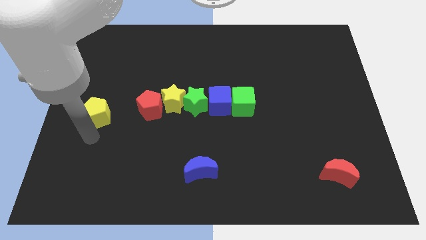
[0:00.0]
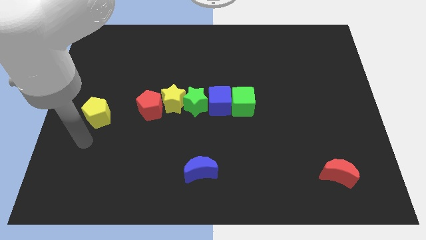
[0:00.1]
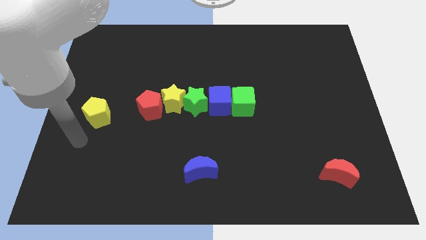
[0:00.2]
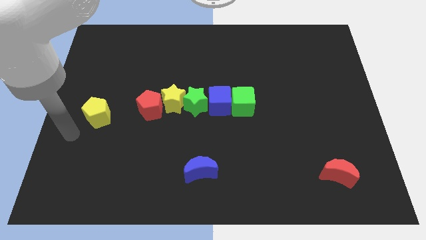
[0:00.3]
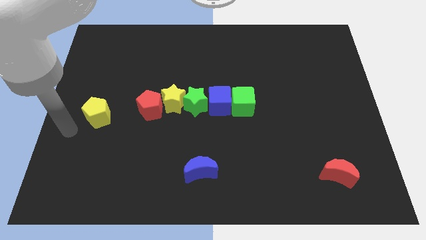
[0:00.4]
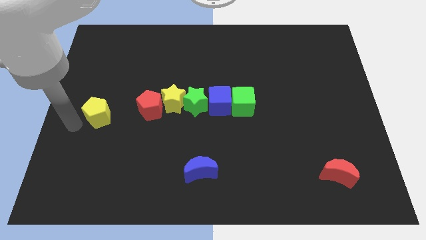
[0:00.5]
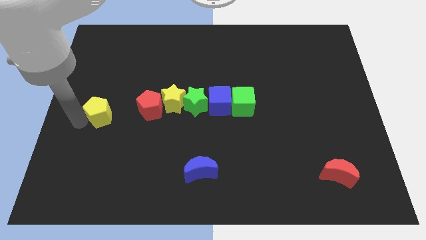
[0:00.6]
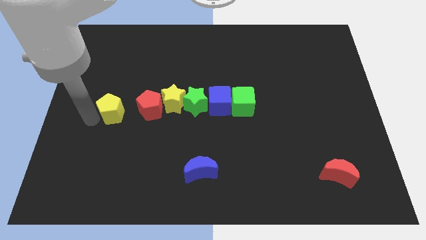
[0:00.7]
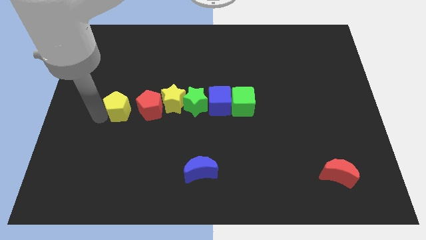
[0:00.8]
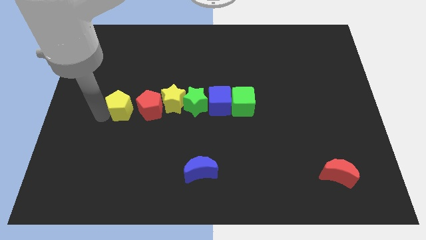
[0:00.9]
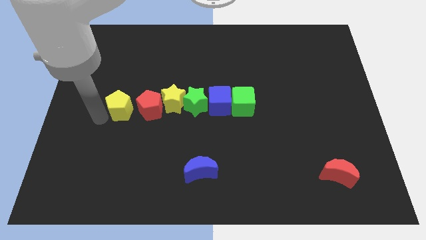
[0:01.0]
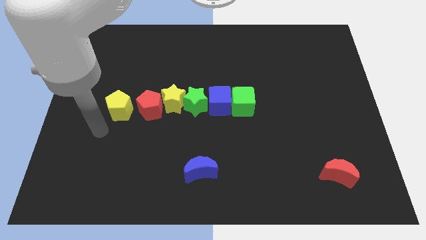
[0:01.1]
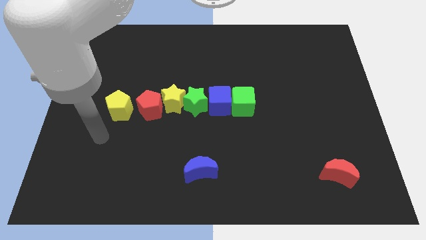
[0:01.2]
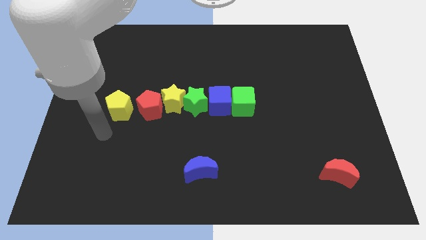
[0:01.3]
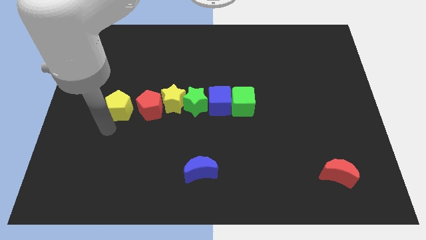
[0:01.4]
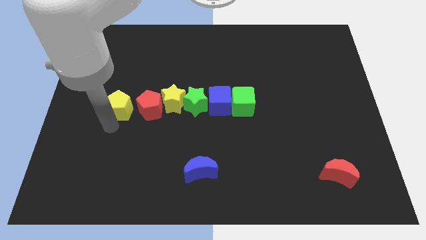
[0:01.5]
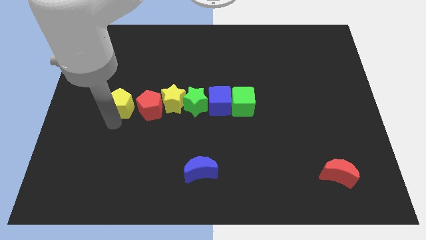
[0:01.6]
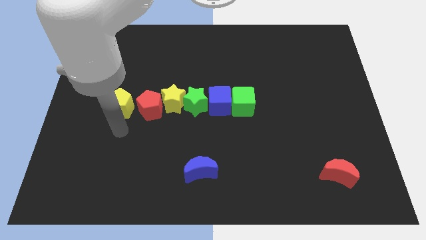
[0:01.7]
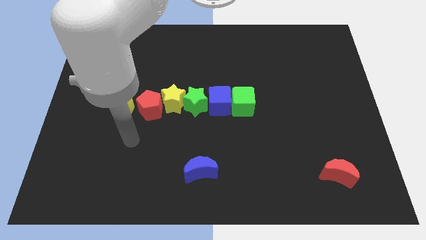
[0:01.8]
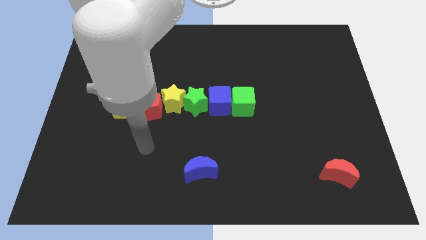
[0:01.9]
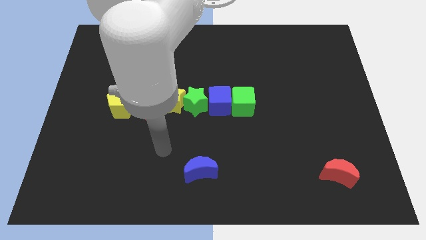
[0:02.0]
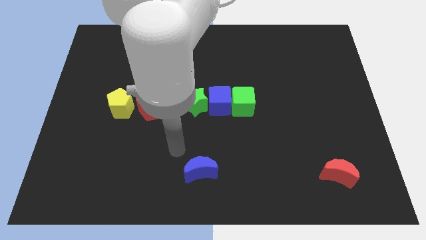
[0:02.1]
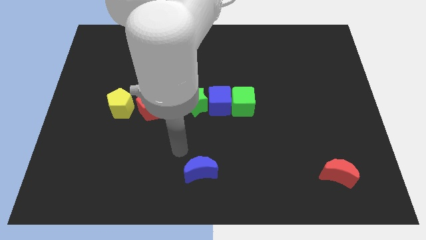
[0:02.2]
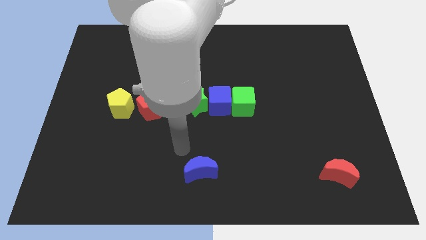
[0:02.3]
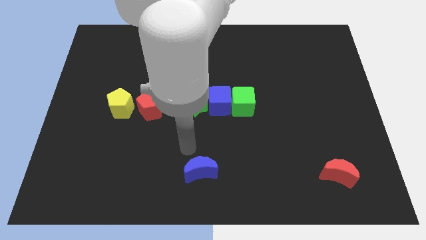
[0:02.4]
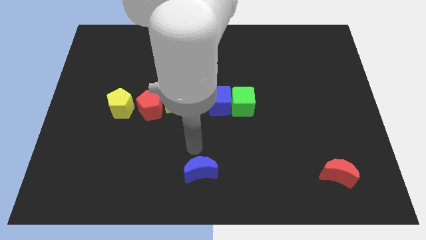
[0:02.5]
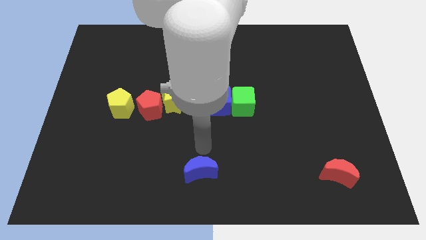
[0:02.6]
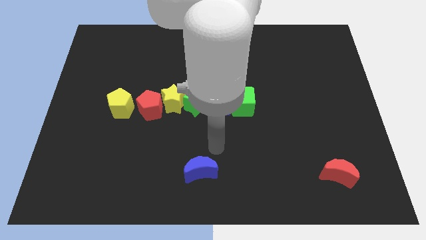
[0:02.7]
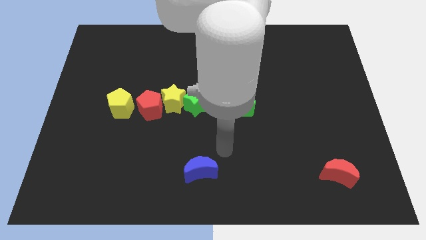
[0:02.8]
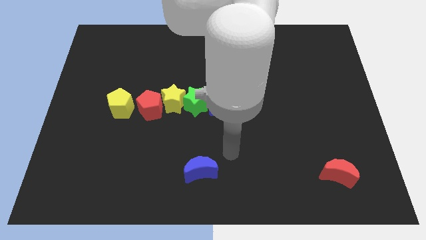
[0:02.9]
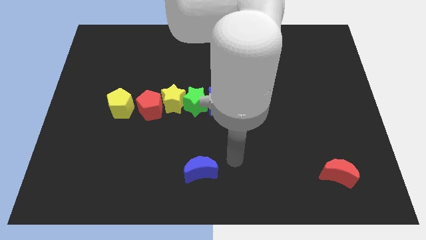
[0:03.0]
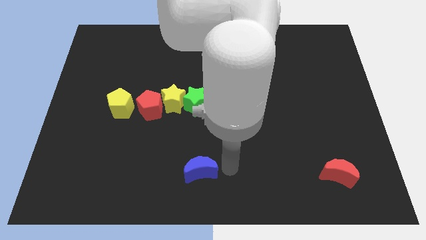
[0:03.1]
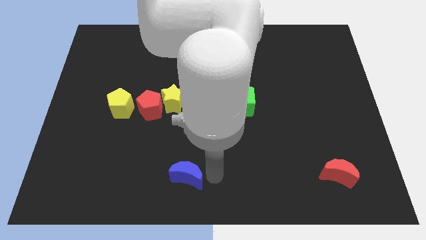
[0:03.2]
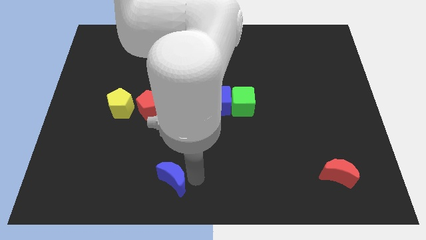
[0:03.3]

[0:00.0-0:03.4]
place the yellow pentagon towards left side of the red pentagon

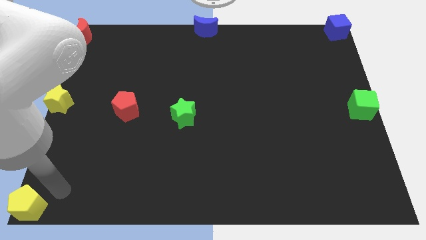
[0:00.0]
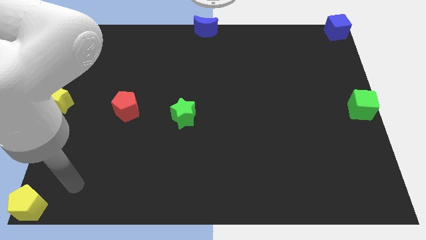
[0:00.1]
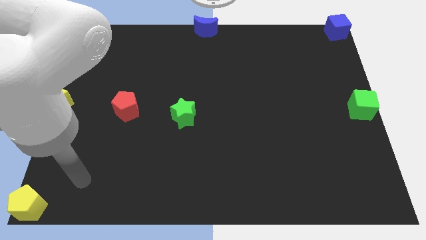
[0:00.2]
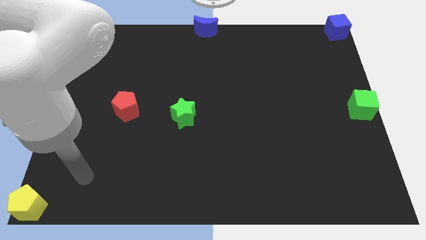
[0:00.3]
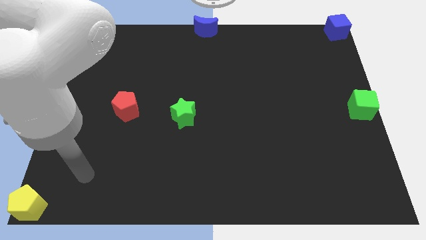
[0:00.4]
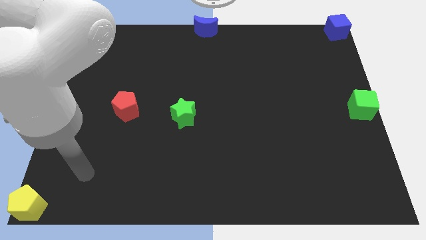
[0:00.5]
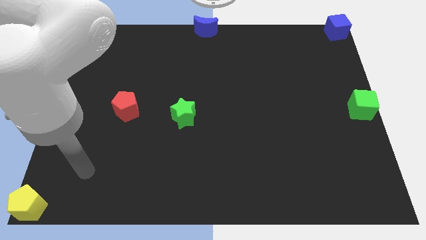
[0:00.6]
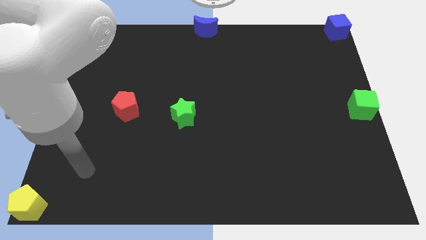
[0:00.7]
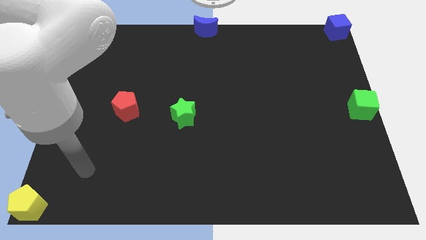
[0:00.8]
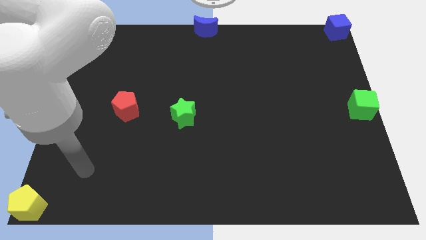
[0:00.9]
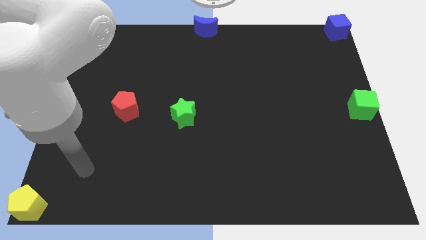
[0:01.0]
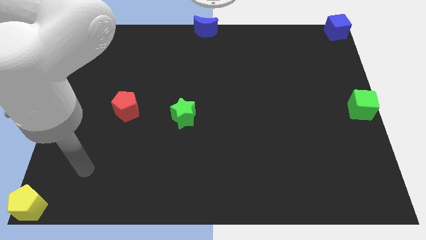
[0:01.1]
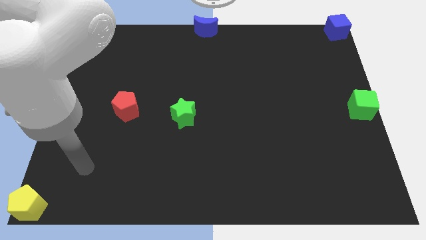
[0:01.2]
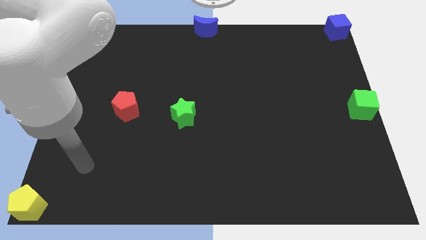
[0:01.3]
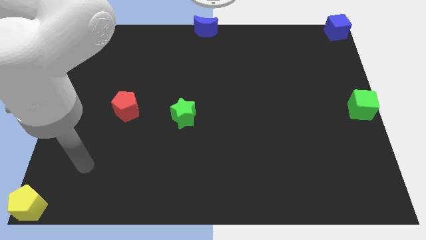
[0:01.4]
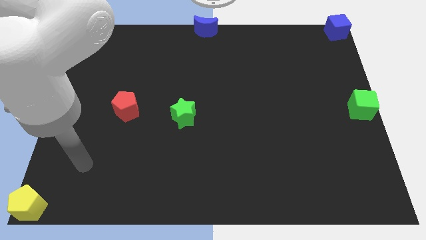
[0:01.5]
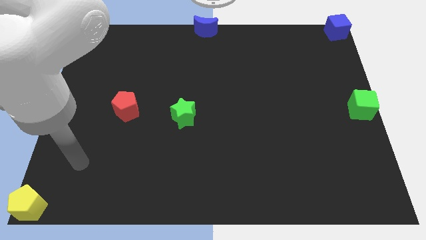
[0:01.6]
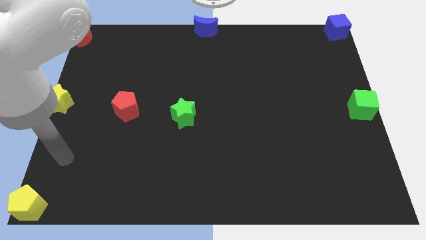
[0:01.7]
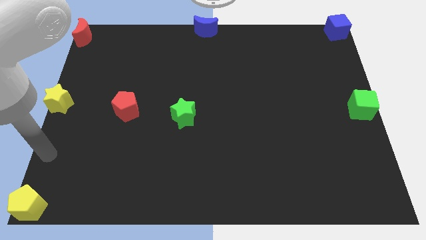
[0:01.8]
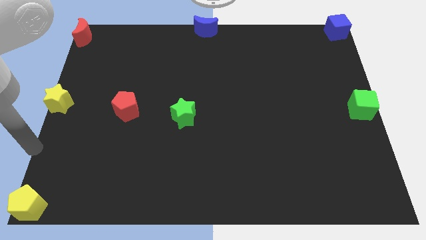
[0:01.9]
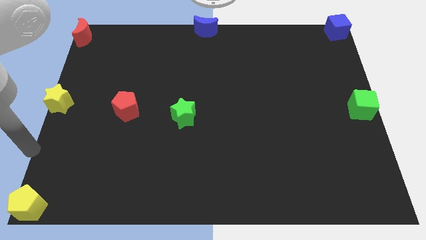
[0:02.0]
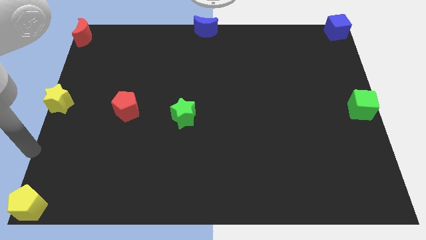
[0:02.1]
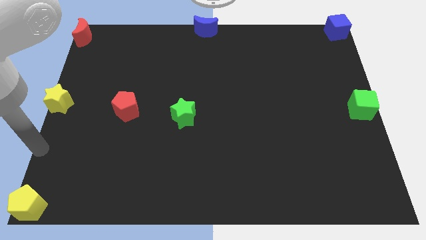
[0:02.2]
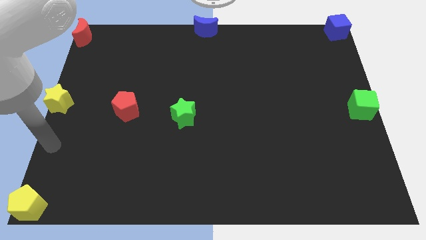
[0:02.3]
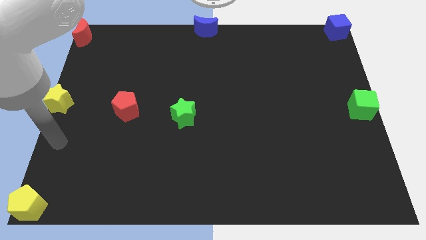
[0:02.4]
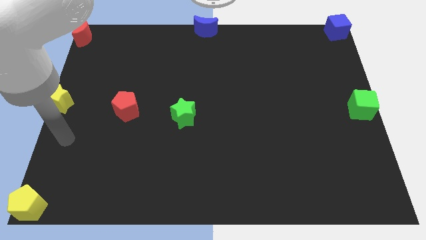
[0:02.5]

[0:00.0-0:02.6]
move away from the yellow pentagon

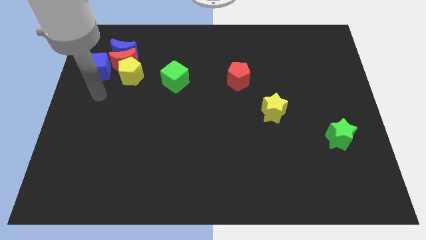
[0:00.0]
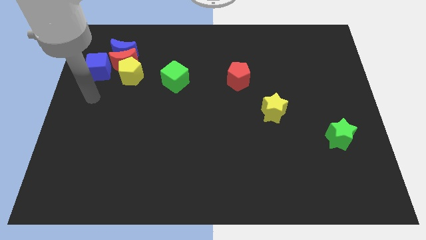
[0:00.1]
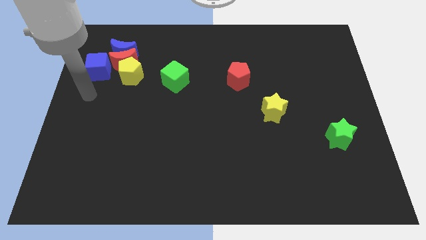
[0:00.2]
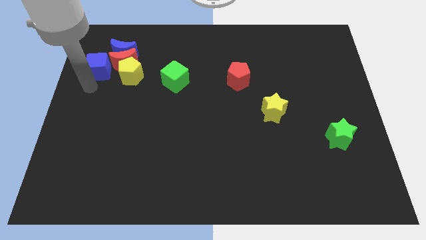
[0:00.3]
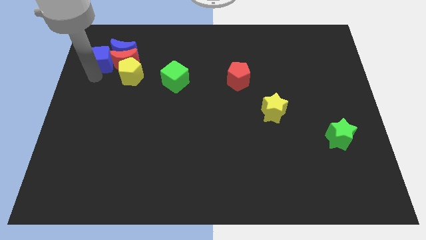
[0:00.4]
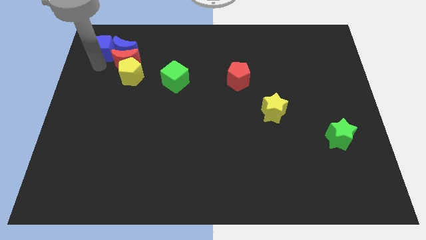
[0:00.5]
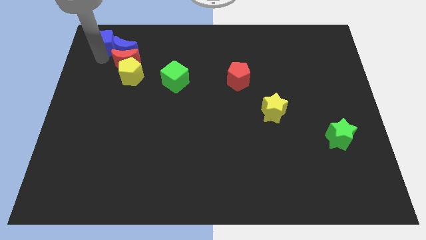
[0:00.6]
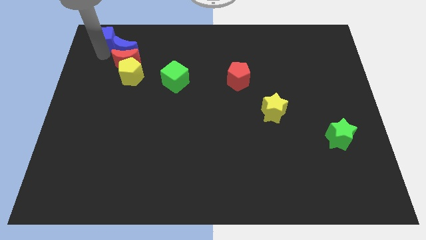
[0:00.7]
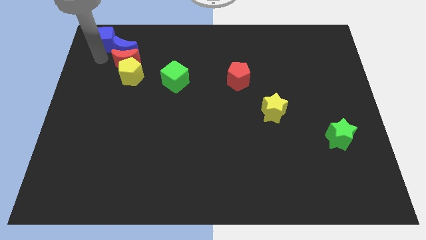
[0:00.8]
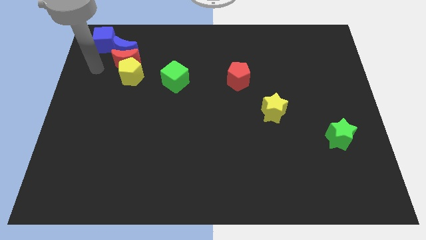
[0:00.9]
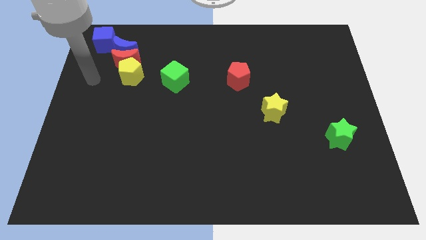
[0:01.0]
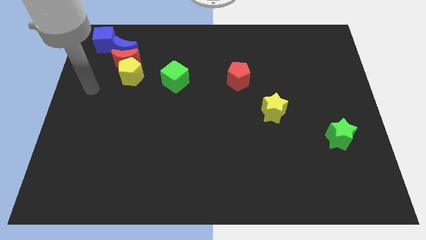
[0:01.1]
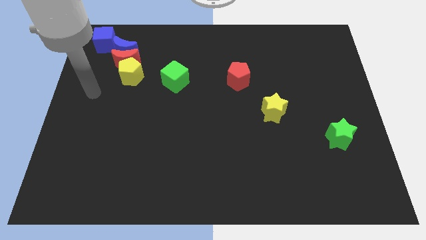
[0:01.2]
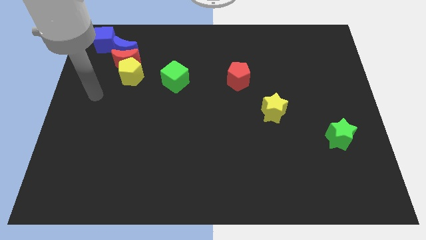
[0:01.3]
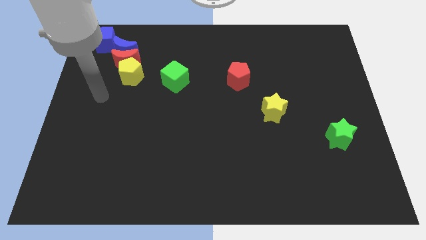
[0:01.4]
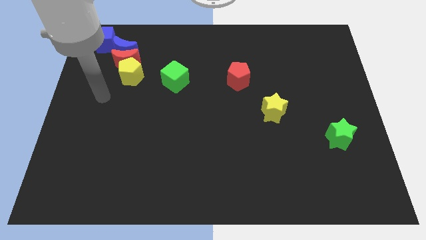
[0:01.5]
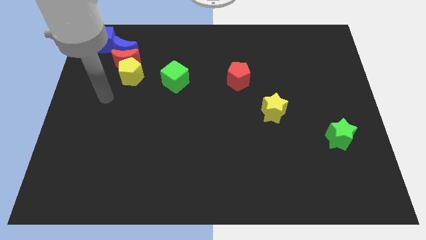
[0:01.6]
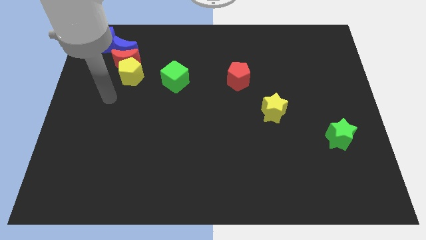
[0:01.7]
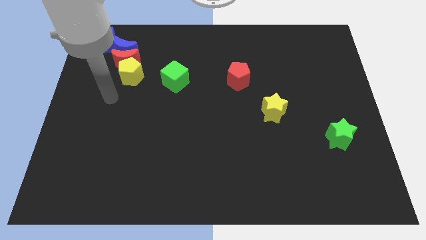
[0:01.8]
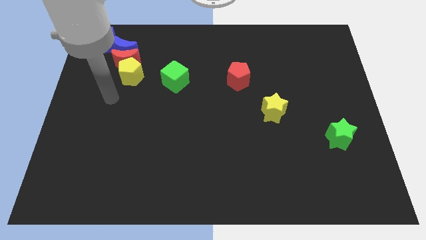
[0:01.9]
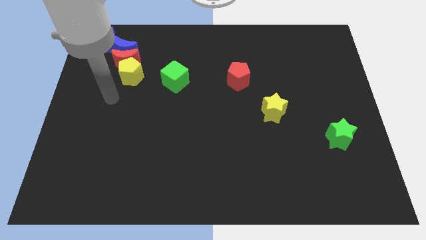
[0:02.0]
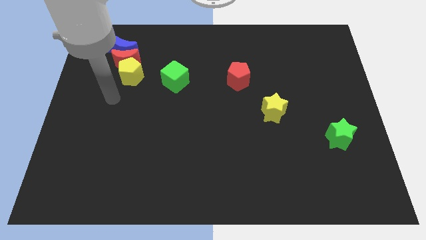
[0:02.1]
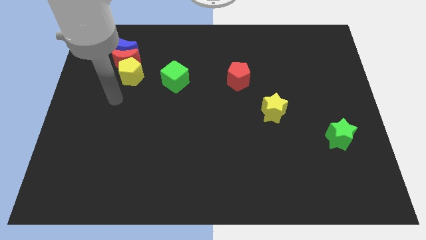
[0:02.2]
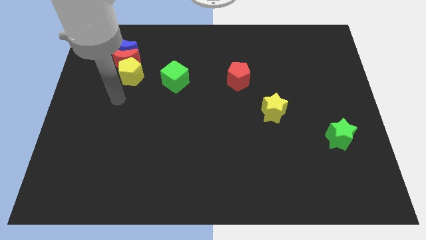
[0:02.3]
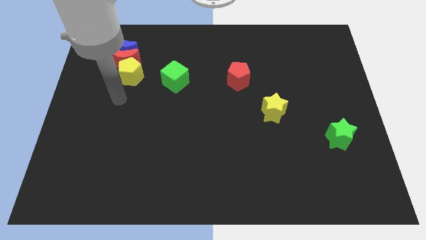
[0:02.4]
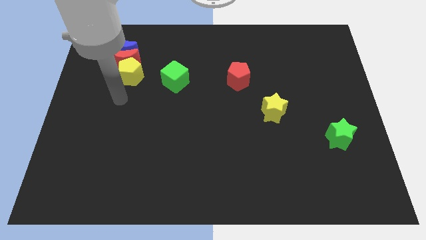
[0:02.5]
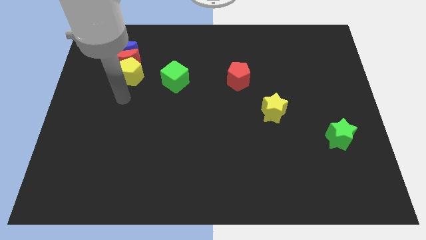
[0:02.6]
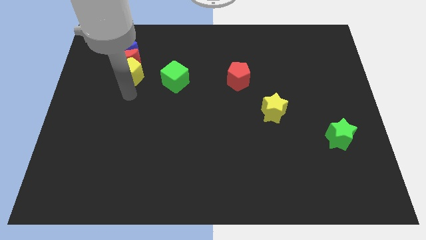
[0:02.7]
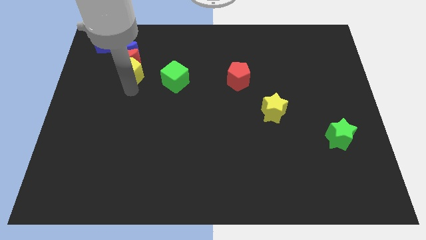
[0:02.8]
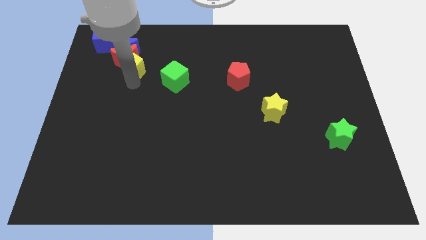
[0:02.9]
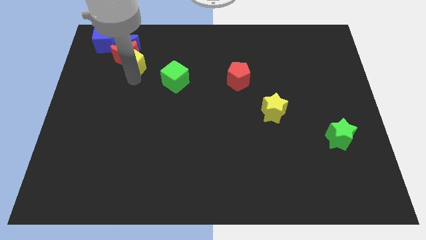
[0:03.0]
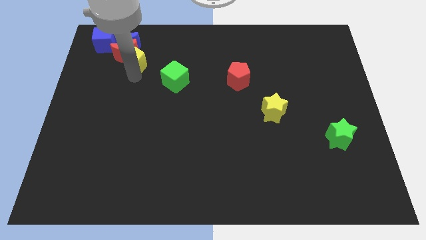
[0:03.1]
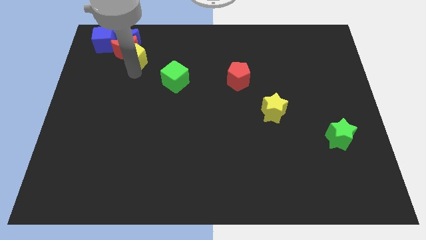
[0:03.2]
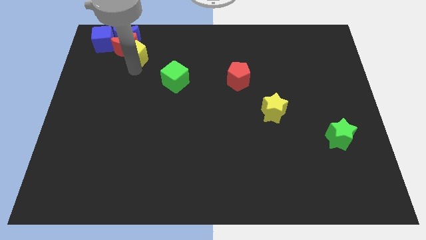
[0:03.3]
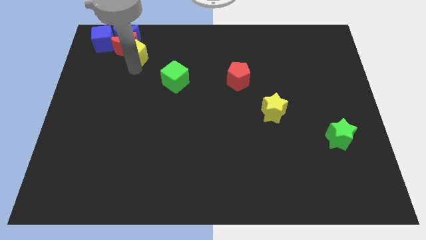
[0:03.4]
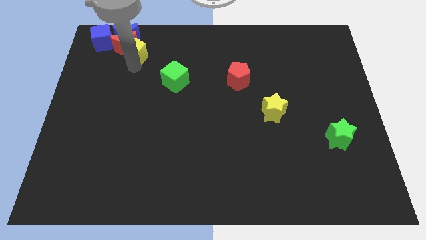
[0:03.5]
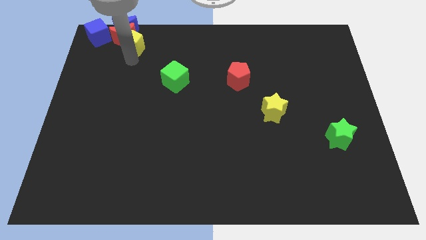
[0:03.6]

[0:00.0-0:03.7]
place the blue moon red moon blue cube and yellow pentagon to the top left of the board
